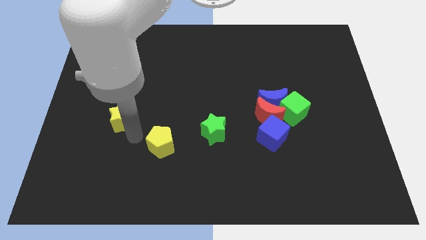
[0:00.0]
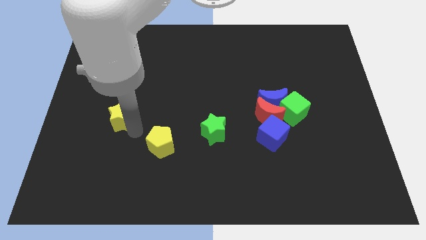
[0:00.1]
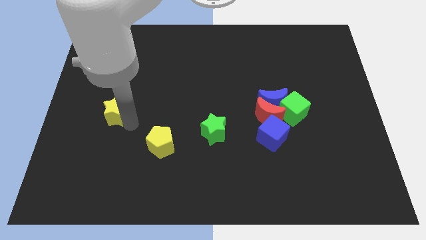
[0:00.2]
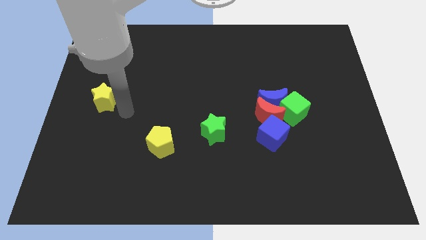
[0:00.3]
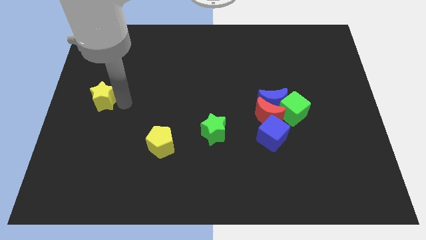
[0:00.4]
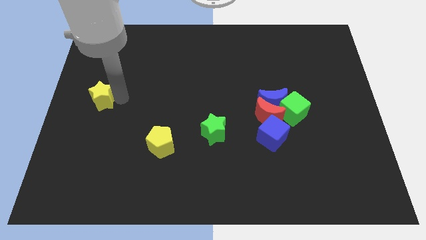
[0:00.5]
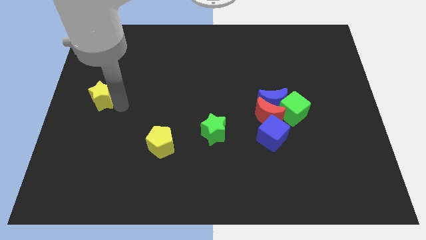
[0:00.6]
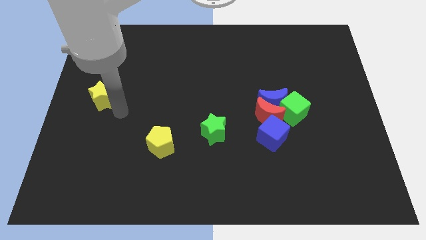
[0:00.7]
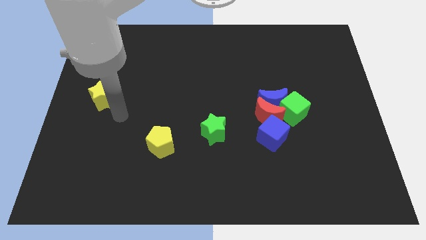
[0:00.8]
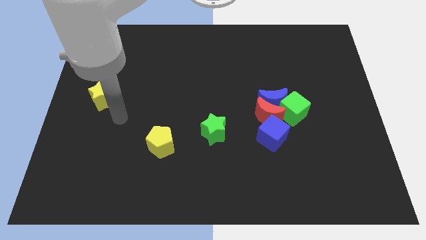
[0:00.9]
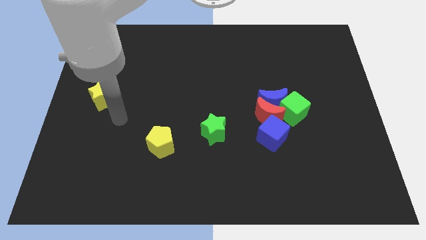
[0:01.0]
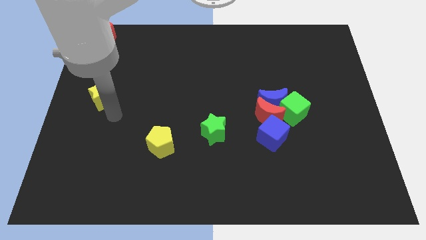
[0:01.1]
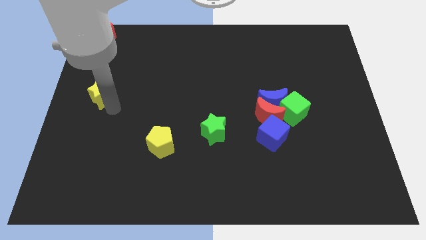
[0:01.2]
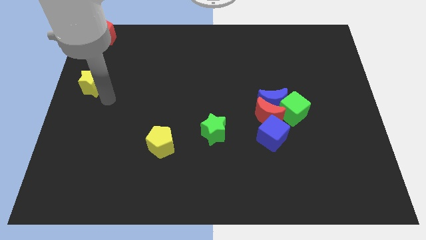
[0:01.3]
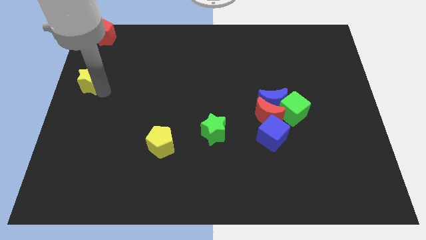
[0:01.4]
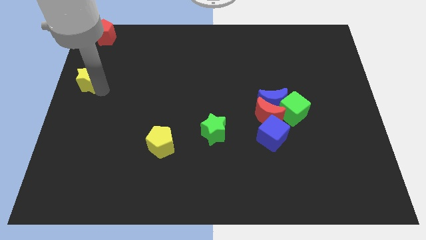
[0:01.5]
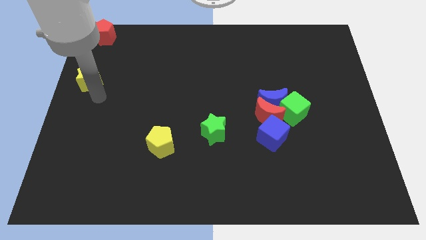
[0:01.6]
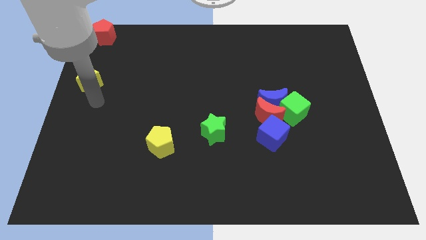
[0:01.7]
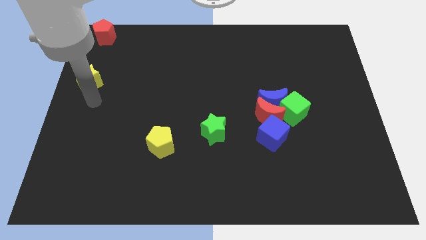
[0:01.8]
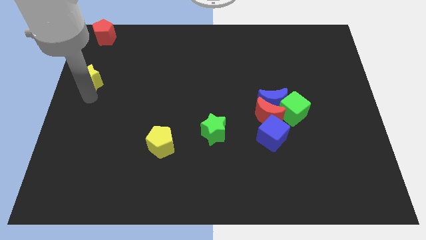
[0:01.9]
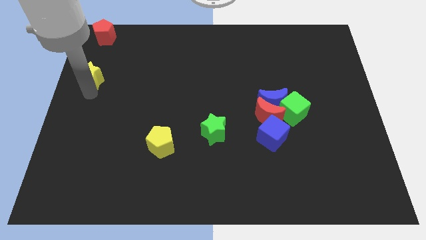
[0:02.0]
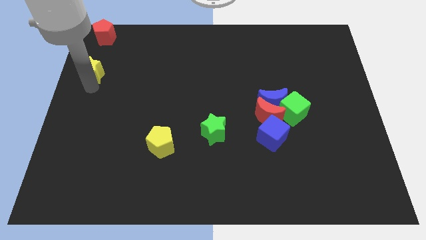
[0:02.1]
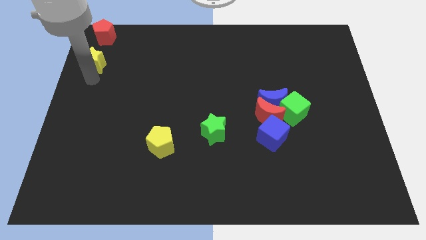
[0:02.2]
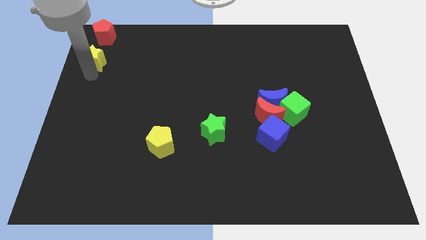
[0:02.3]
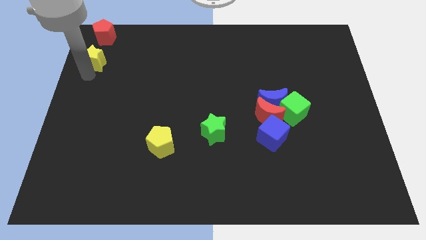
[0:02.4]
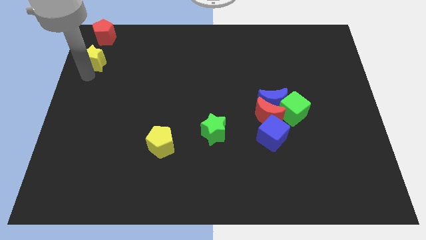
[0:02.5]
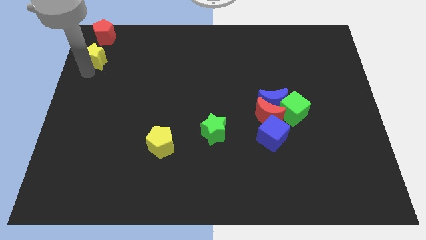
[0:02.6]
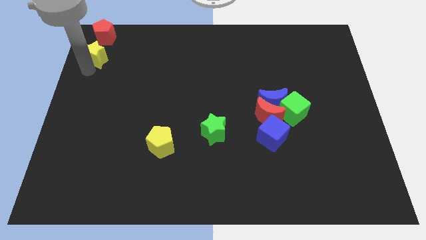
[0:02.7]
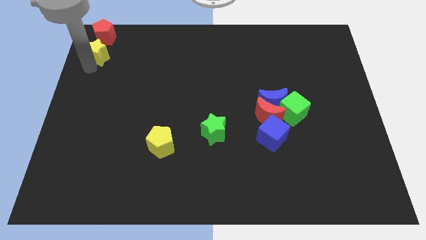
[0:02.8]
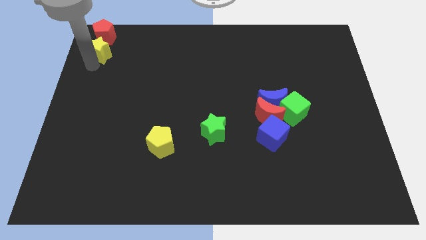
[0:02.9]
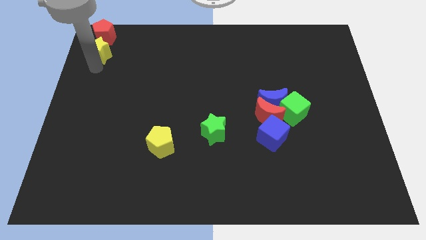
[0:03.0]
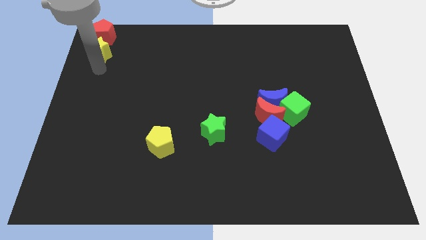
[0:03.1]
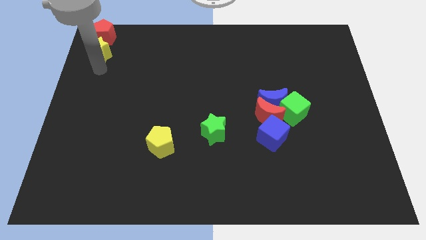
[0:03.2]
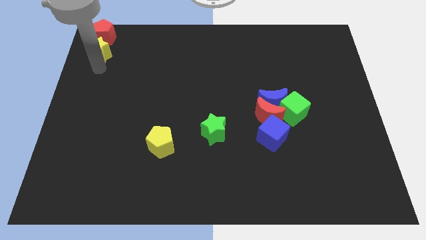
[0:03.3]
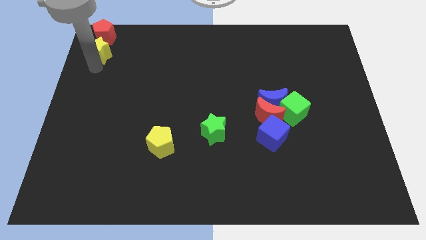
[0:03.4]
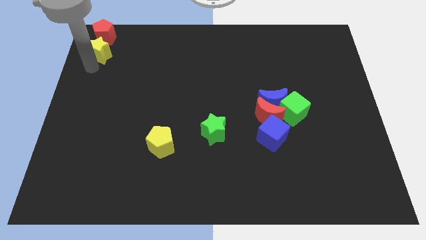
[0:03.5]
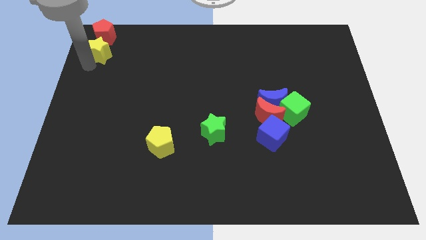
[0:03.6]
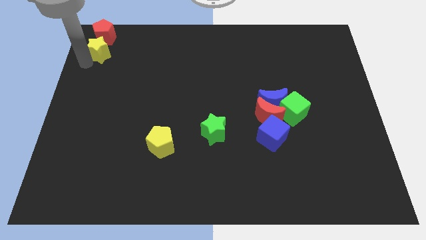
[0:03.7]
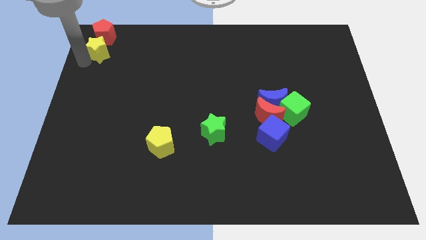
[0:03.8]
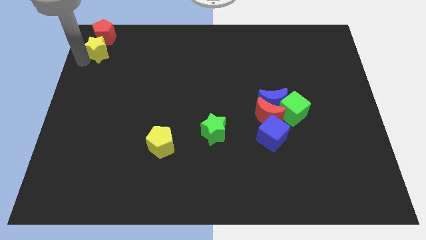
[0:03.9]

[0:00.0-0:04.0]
place the yellow star below red pentagon

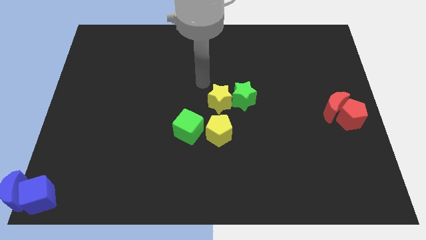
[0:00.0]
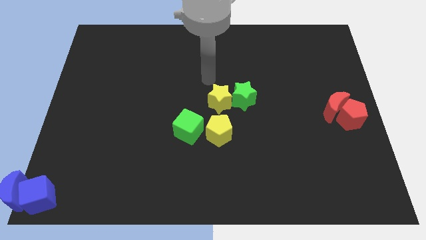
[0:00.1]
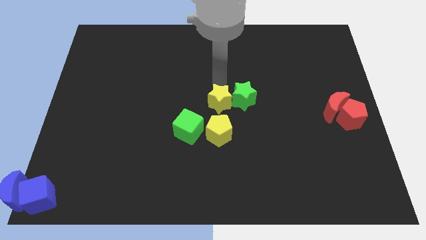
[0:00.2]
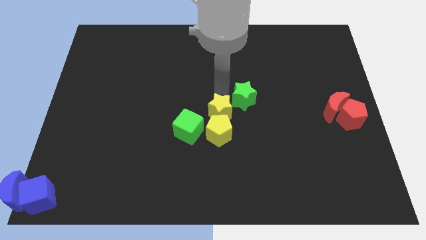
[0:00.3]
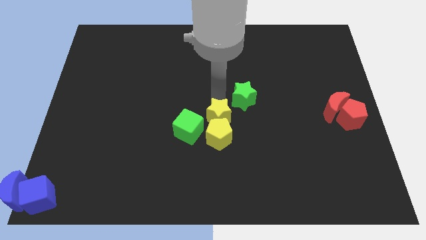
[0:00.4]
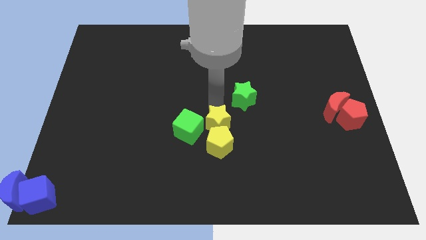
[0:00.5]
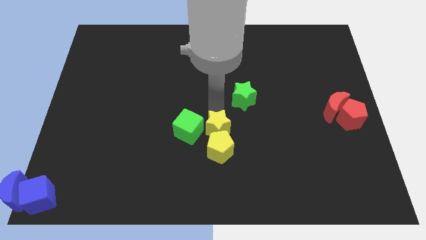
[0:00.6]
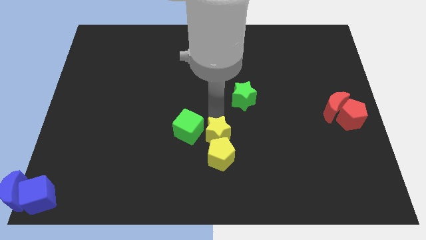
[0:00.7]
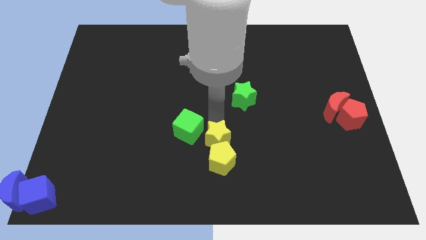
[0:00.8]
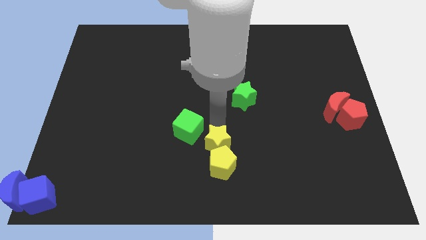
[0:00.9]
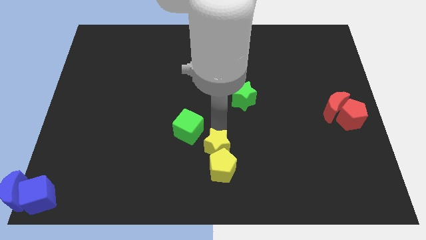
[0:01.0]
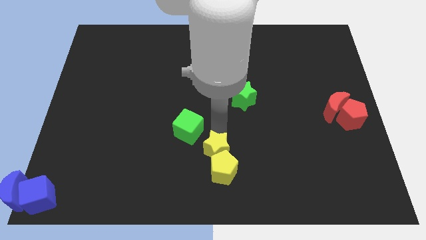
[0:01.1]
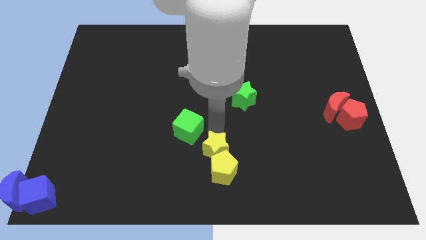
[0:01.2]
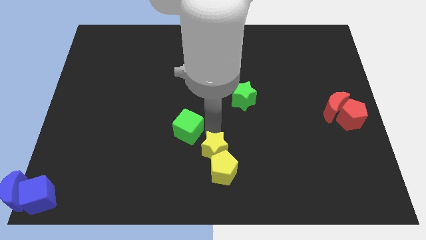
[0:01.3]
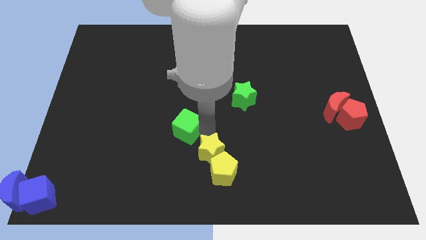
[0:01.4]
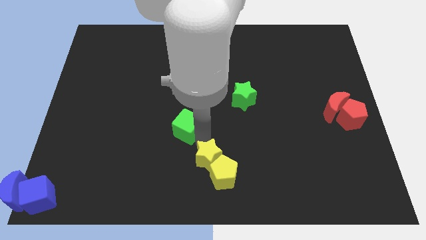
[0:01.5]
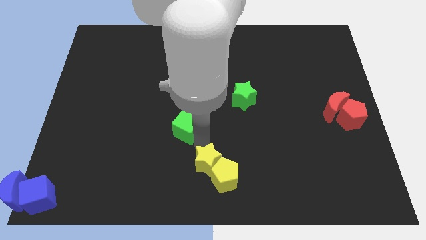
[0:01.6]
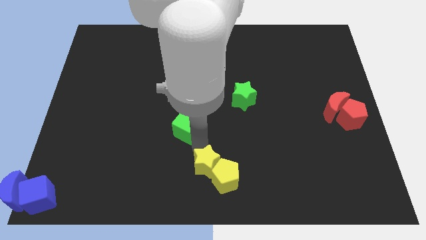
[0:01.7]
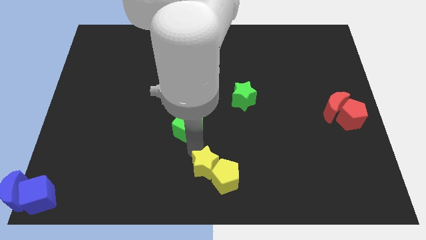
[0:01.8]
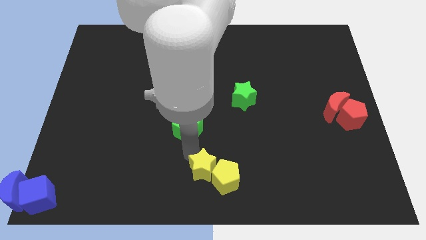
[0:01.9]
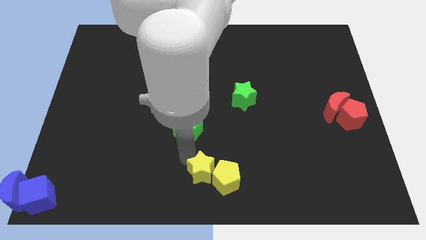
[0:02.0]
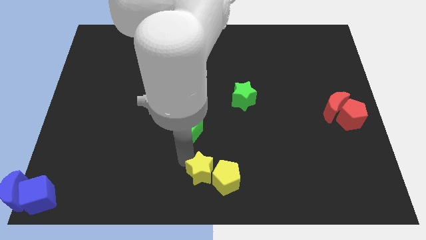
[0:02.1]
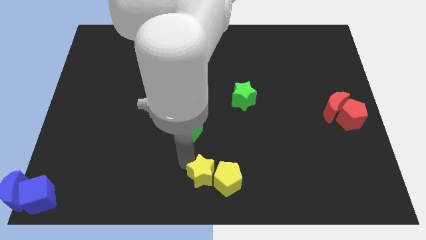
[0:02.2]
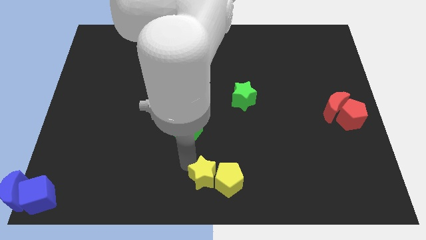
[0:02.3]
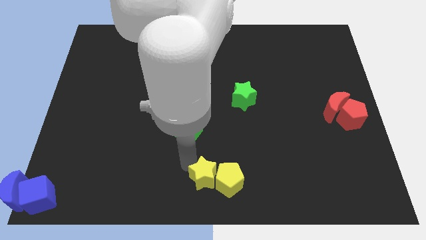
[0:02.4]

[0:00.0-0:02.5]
push the yellow pentagon to the bottom center with yellow star

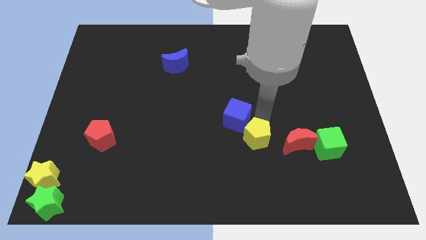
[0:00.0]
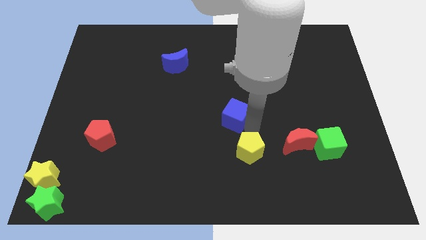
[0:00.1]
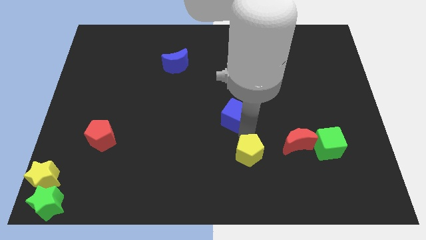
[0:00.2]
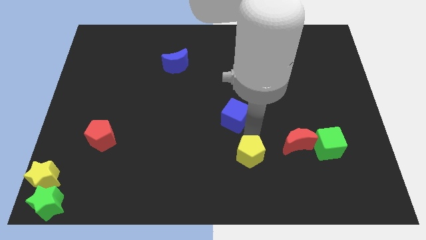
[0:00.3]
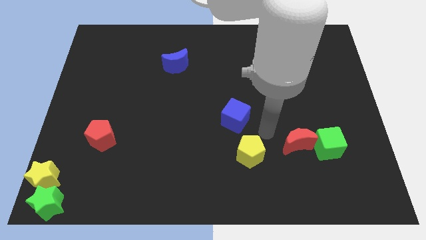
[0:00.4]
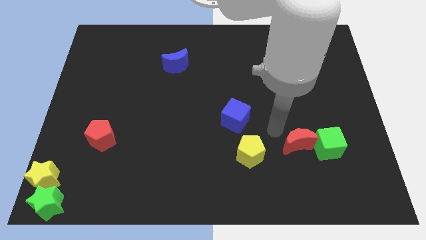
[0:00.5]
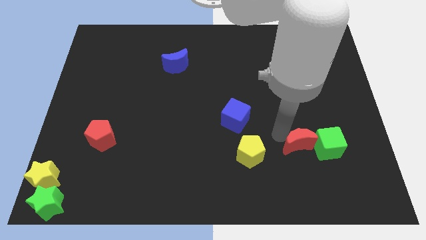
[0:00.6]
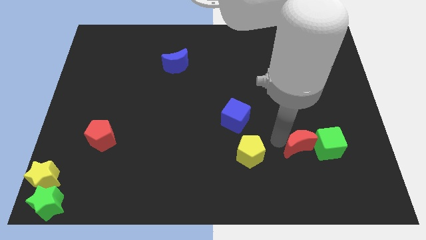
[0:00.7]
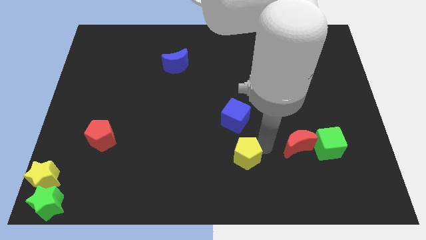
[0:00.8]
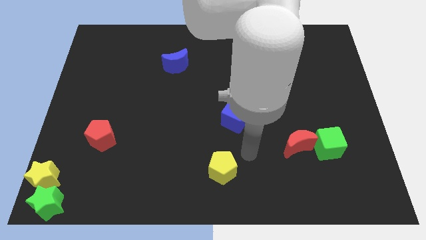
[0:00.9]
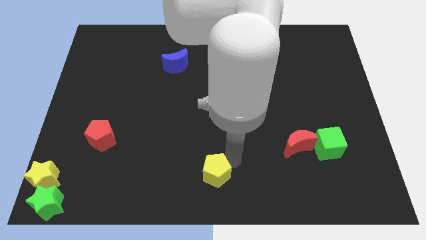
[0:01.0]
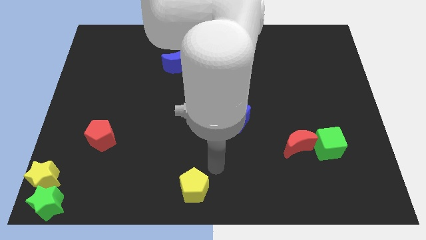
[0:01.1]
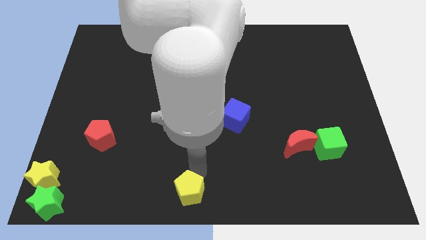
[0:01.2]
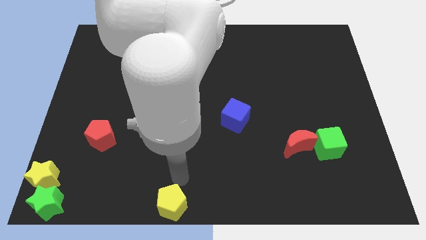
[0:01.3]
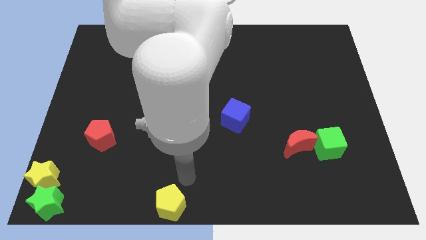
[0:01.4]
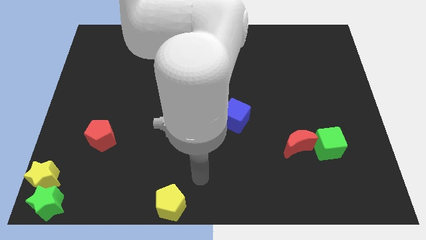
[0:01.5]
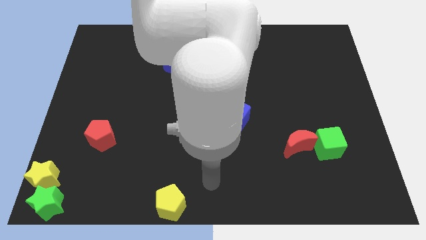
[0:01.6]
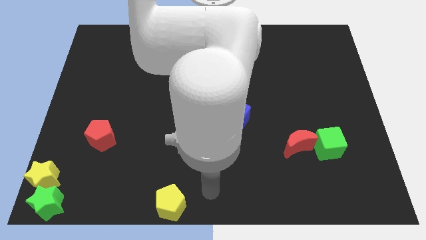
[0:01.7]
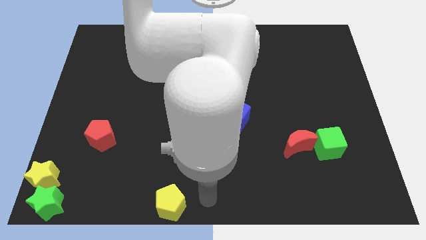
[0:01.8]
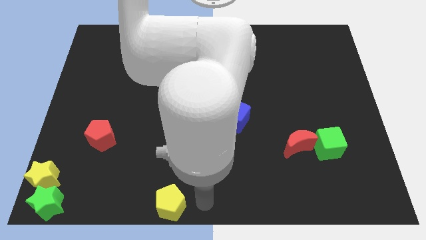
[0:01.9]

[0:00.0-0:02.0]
push yellow pentagon towards bottom of the board

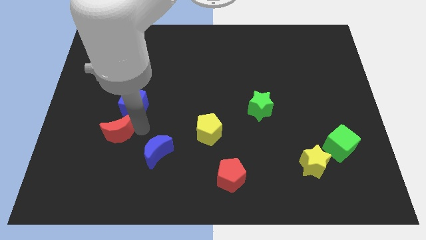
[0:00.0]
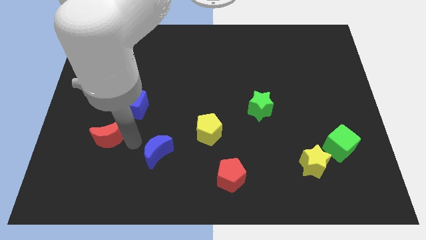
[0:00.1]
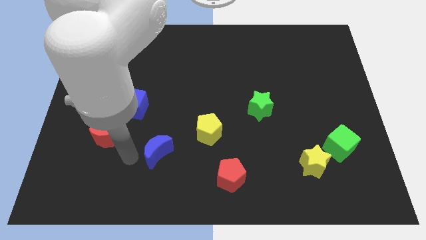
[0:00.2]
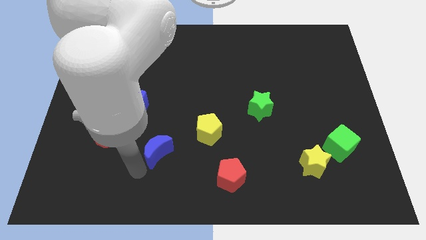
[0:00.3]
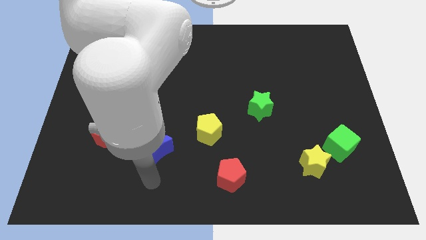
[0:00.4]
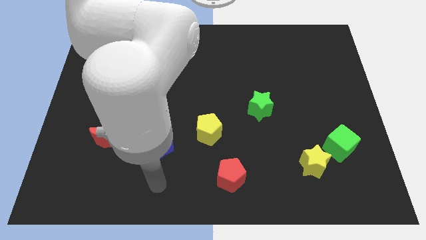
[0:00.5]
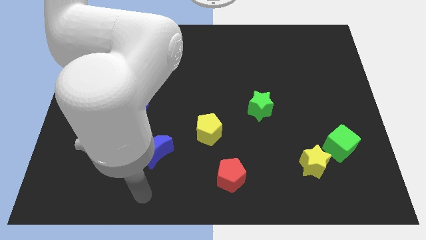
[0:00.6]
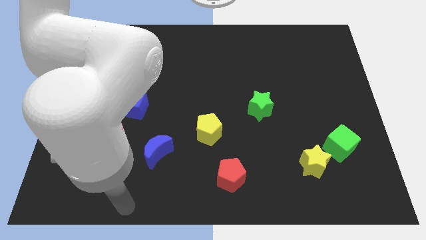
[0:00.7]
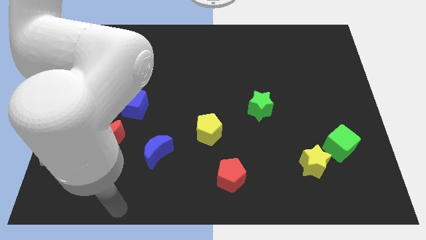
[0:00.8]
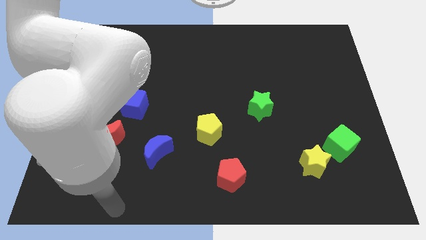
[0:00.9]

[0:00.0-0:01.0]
move your arm to the bottom of the board
